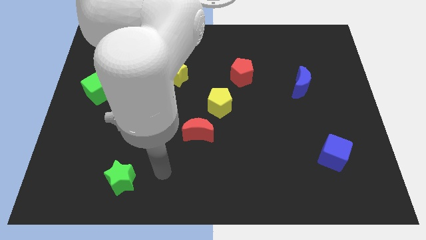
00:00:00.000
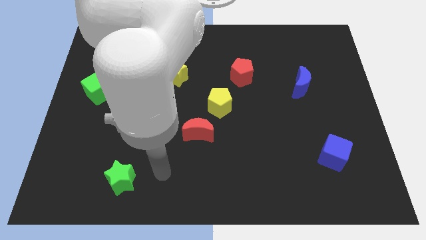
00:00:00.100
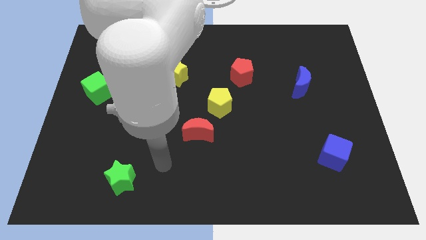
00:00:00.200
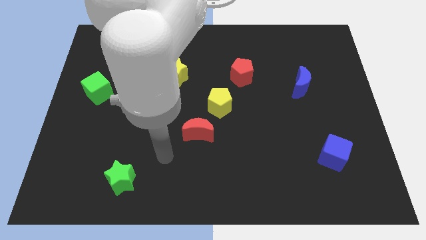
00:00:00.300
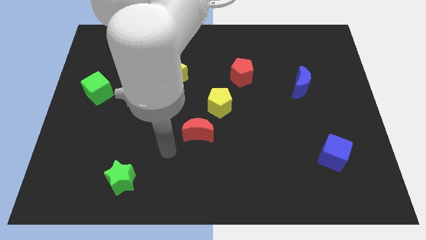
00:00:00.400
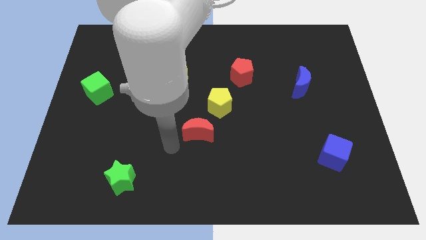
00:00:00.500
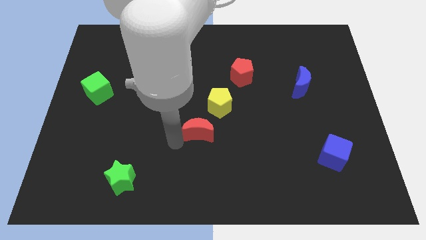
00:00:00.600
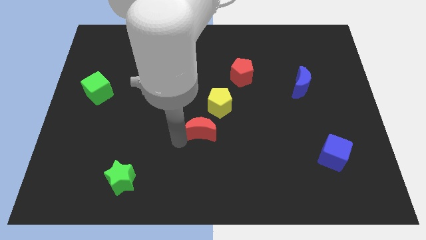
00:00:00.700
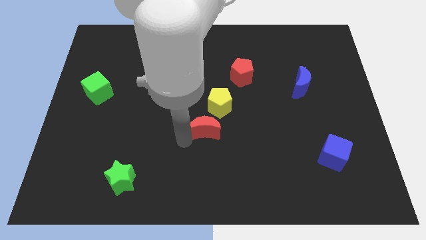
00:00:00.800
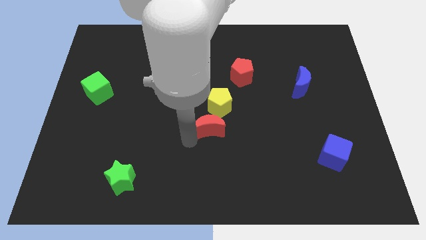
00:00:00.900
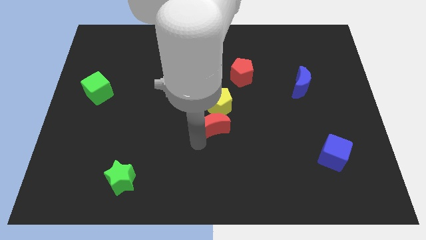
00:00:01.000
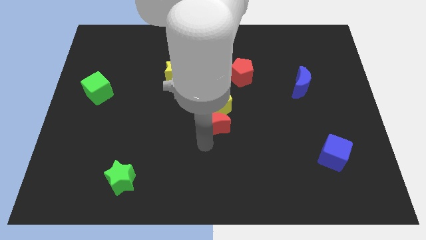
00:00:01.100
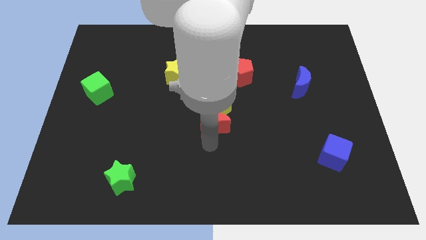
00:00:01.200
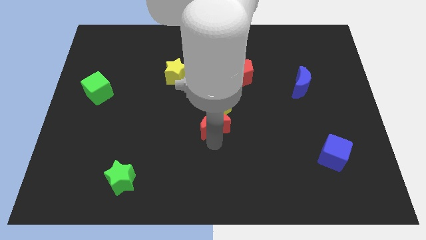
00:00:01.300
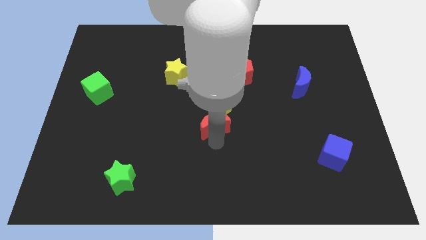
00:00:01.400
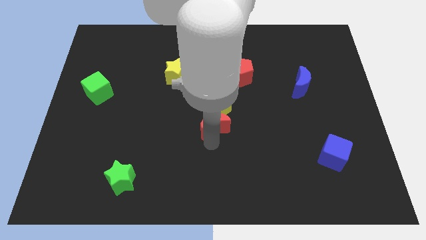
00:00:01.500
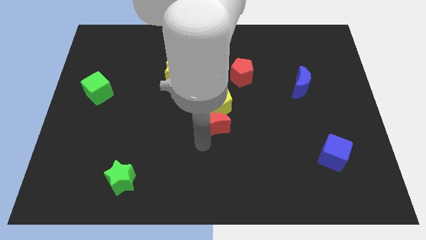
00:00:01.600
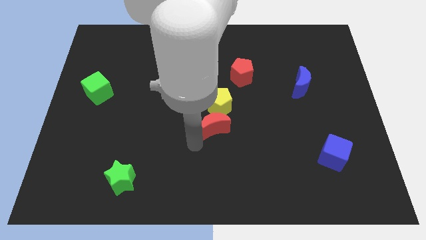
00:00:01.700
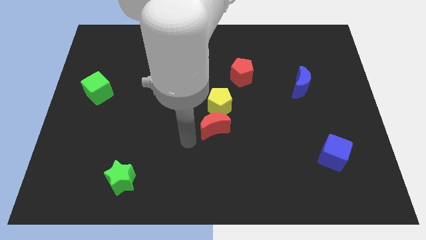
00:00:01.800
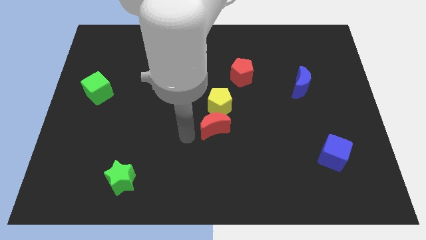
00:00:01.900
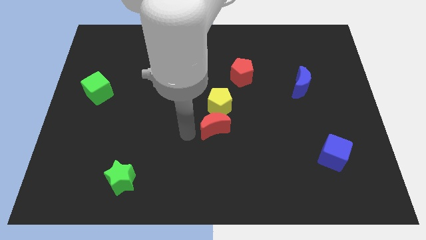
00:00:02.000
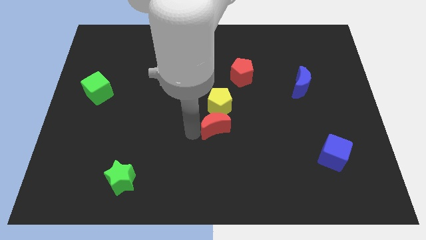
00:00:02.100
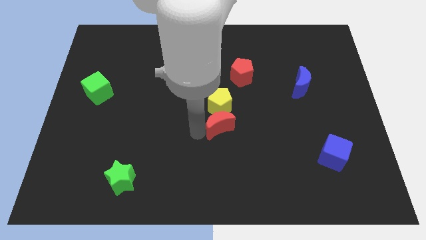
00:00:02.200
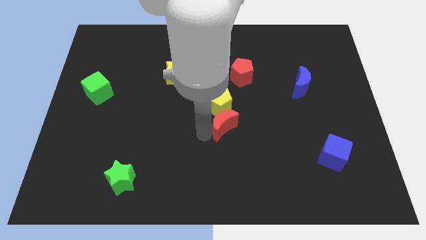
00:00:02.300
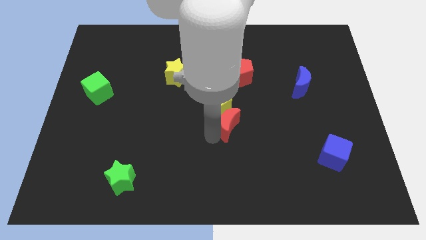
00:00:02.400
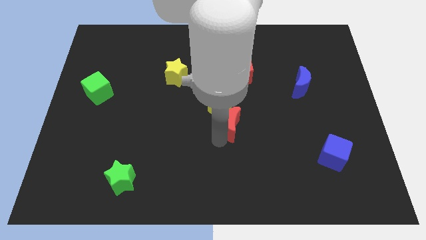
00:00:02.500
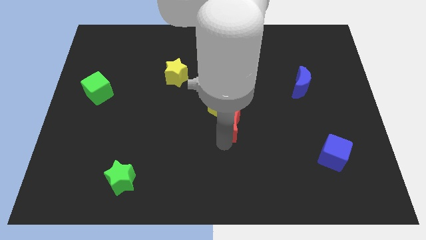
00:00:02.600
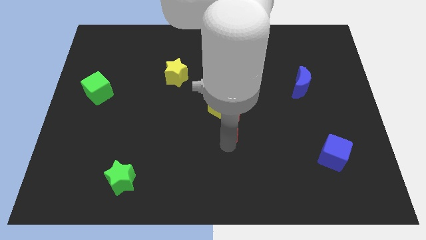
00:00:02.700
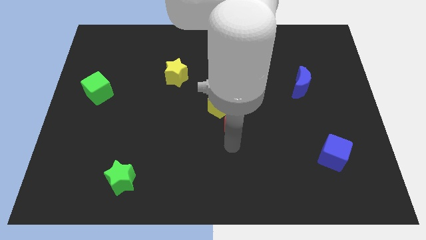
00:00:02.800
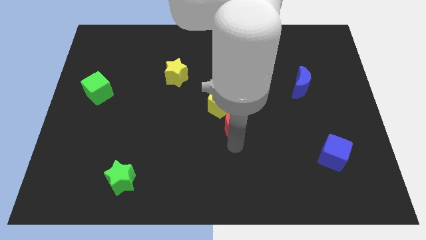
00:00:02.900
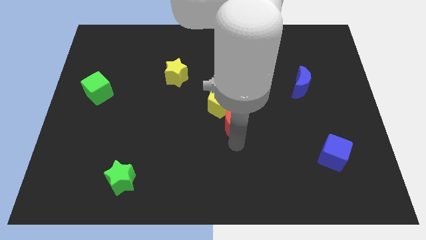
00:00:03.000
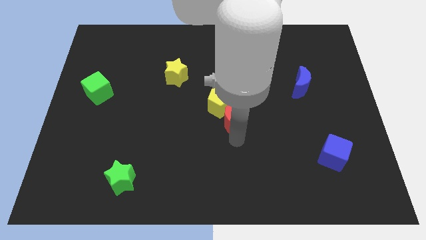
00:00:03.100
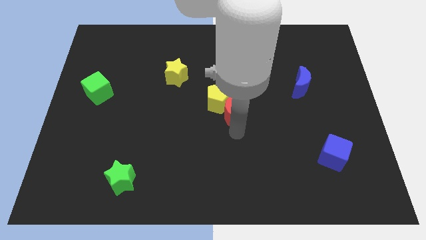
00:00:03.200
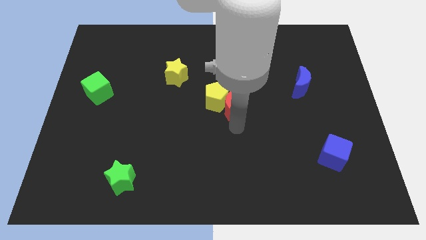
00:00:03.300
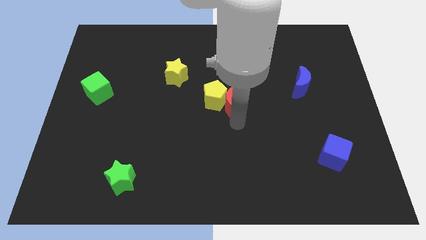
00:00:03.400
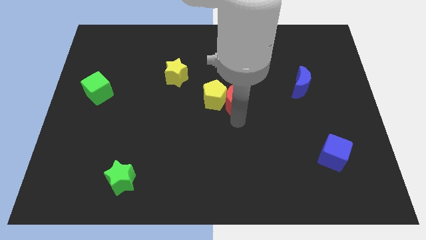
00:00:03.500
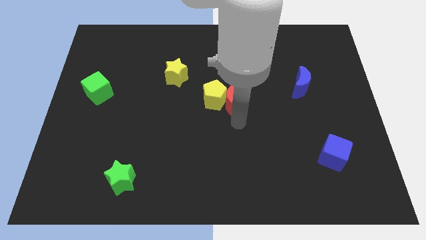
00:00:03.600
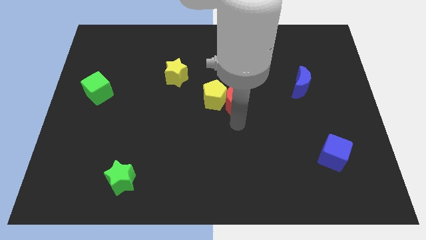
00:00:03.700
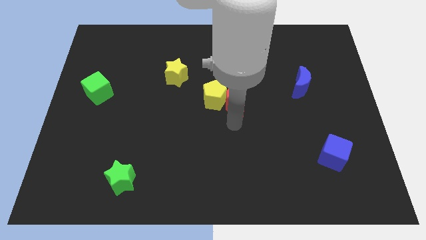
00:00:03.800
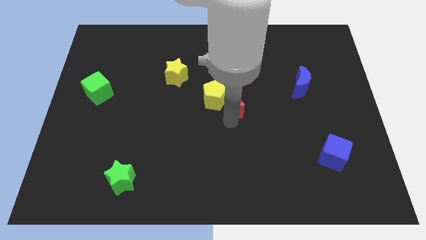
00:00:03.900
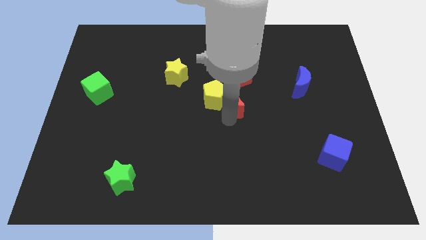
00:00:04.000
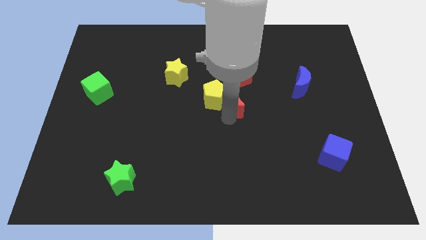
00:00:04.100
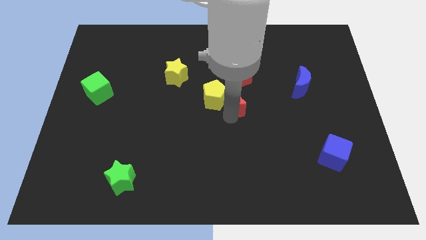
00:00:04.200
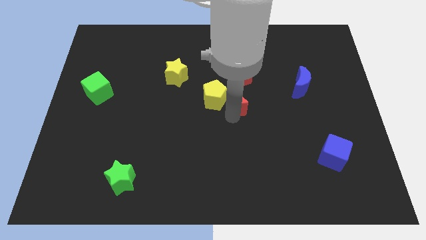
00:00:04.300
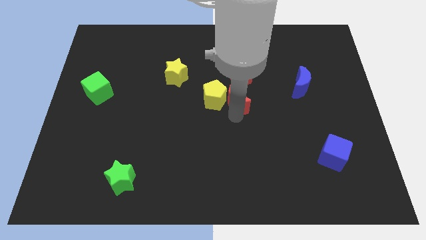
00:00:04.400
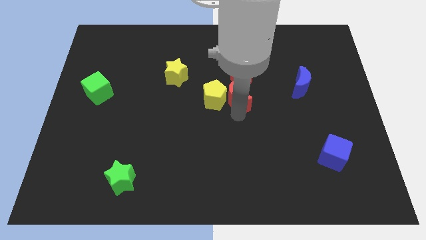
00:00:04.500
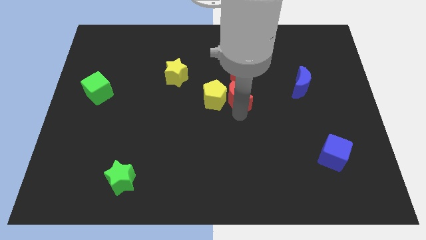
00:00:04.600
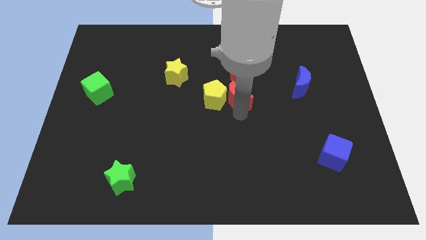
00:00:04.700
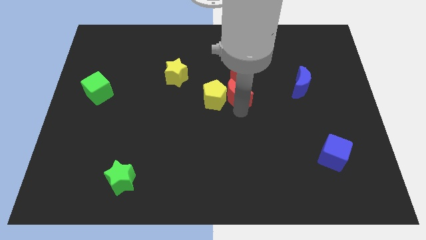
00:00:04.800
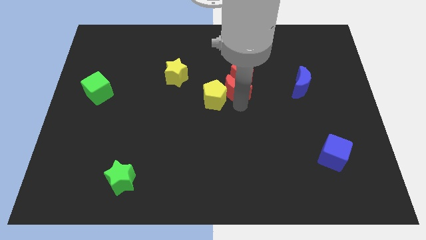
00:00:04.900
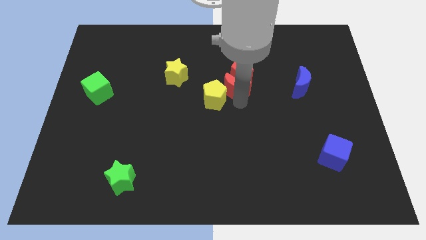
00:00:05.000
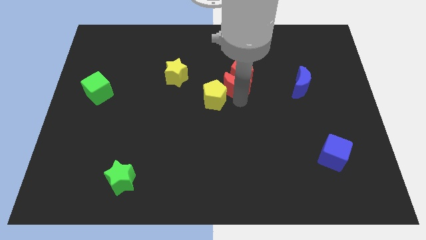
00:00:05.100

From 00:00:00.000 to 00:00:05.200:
move the red moon towards the red pentagon

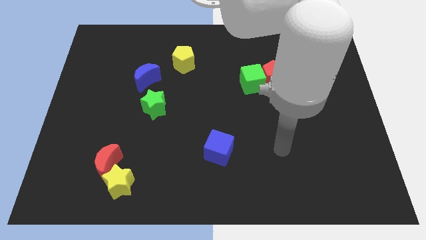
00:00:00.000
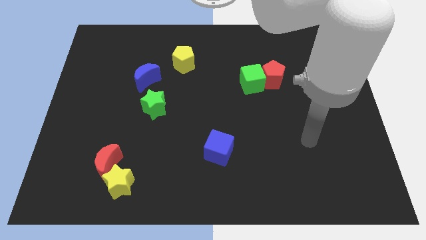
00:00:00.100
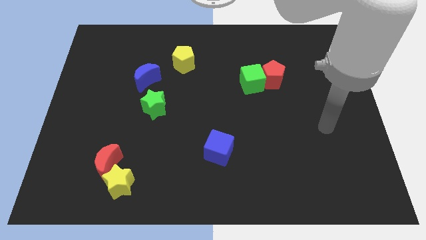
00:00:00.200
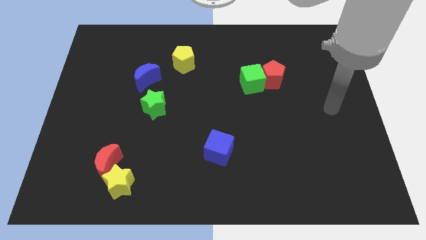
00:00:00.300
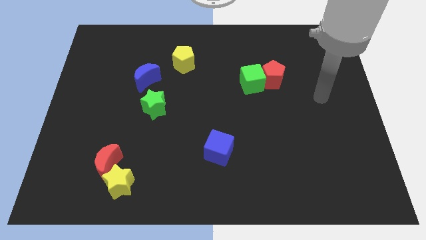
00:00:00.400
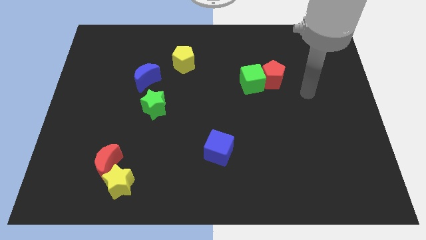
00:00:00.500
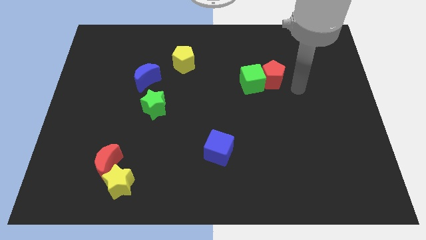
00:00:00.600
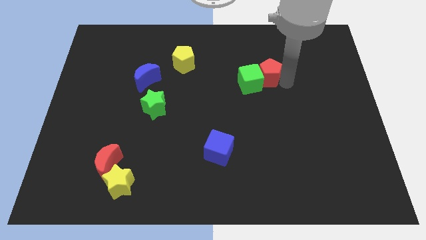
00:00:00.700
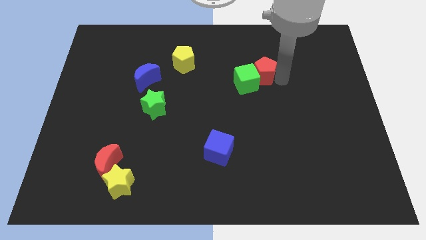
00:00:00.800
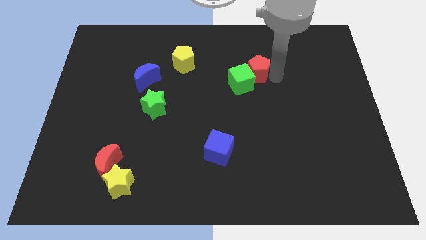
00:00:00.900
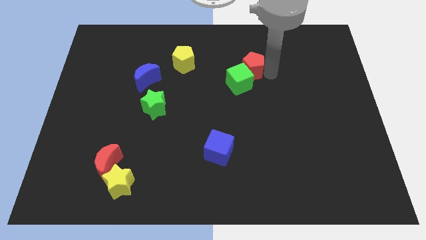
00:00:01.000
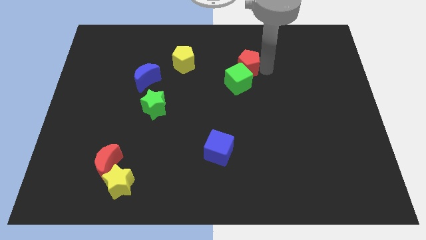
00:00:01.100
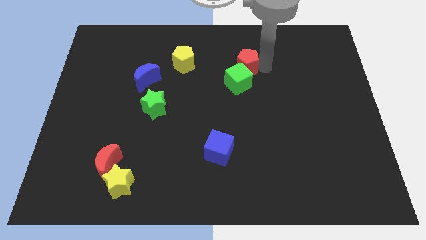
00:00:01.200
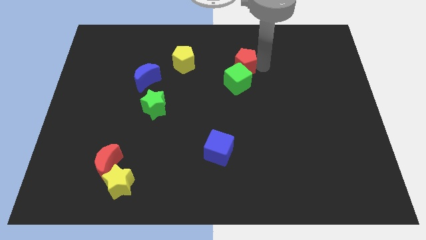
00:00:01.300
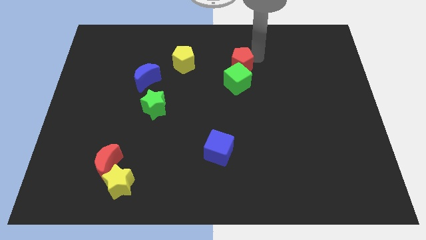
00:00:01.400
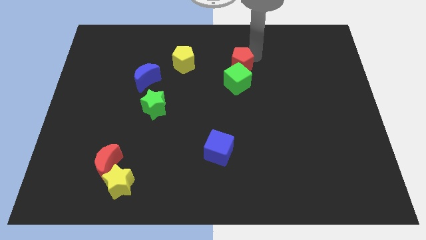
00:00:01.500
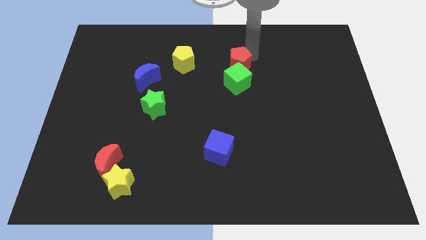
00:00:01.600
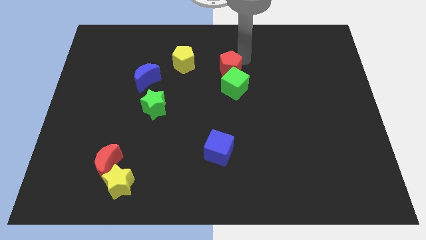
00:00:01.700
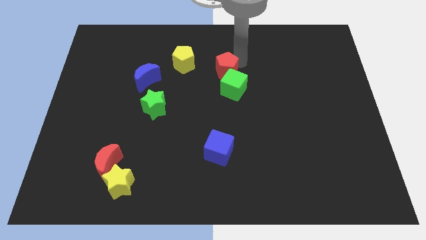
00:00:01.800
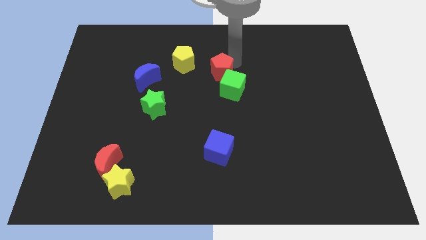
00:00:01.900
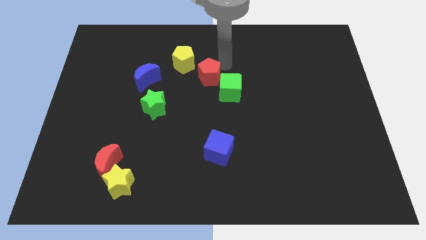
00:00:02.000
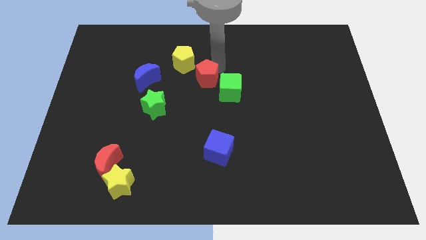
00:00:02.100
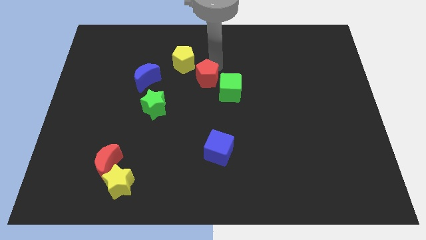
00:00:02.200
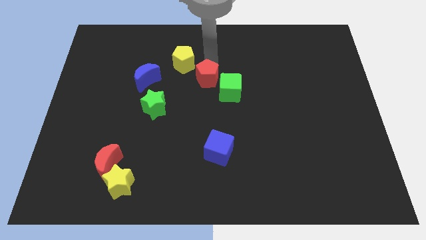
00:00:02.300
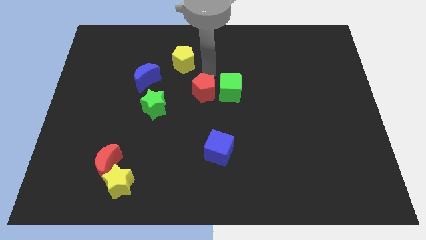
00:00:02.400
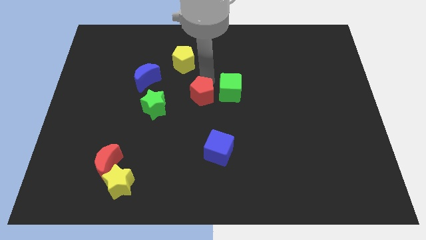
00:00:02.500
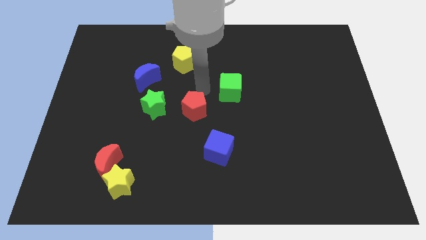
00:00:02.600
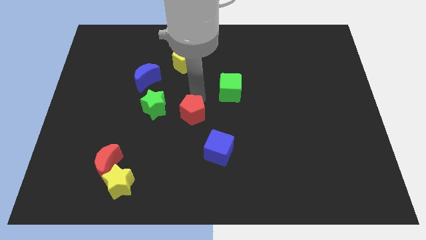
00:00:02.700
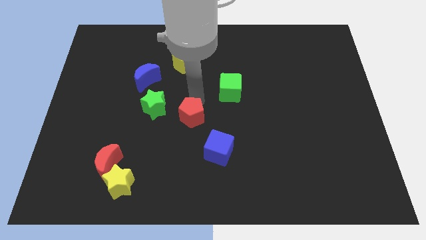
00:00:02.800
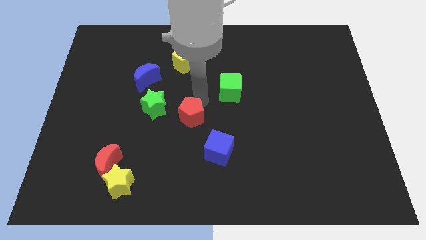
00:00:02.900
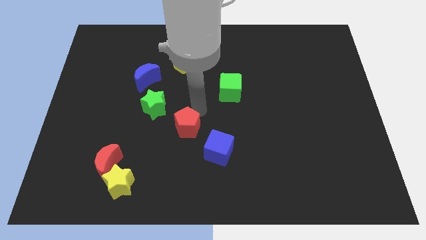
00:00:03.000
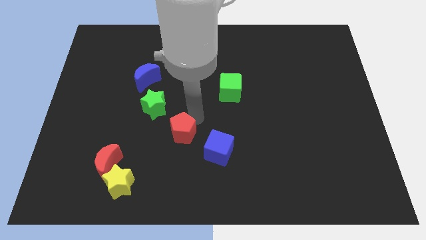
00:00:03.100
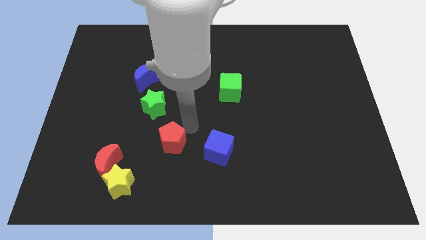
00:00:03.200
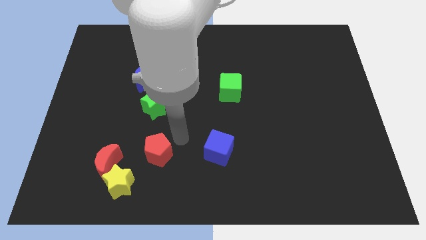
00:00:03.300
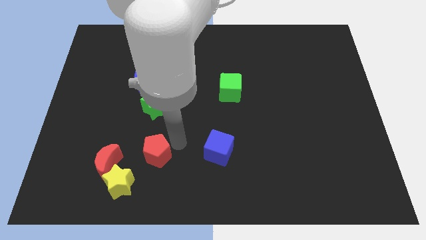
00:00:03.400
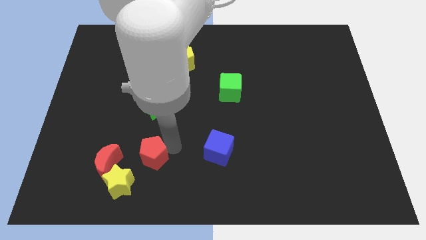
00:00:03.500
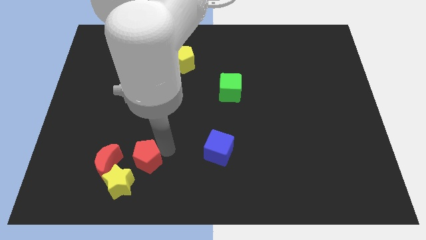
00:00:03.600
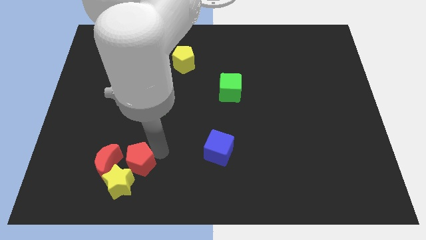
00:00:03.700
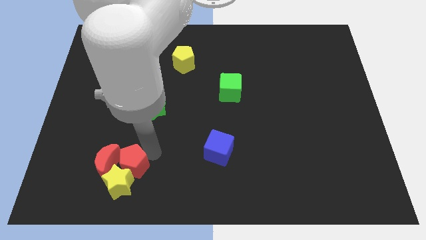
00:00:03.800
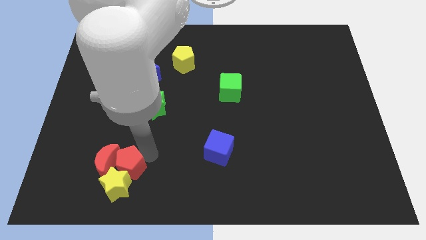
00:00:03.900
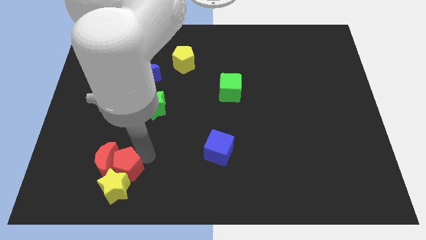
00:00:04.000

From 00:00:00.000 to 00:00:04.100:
move the red pentagon close to the yellow star
